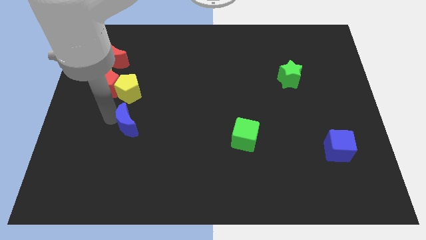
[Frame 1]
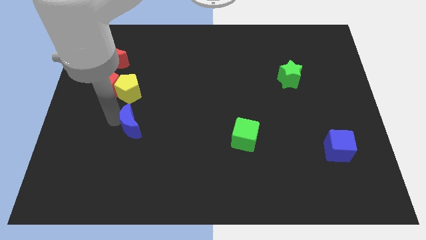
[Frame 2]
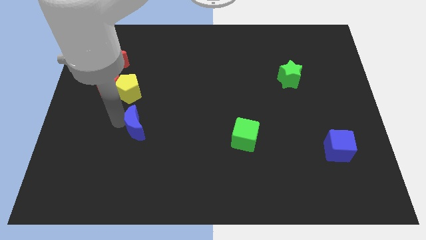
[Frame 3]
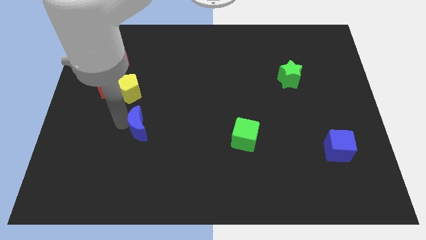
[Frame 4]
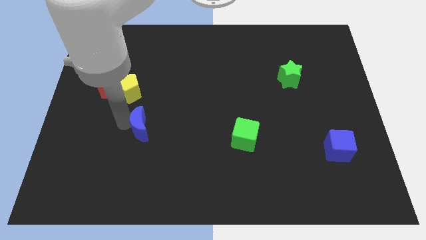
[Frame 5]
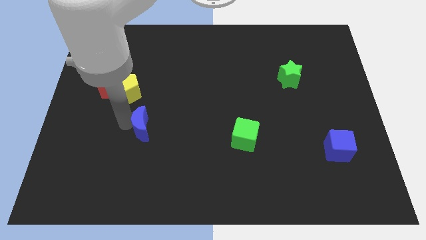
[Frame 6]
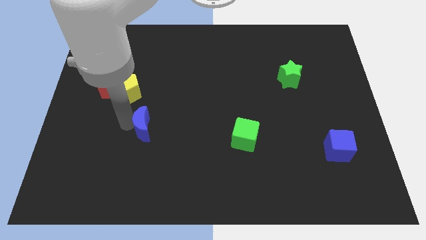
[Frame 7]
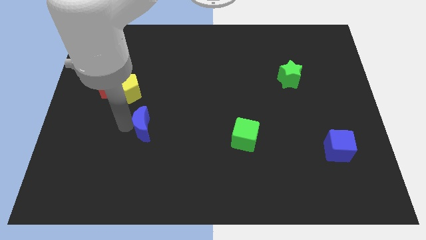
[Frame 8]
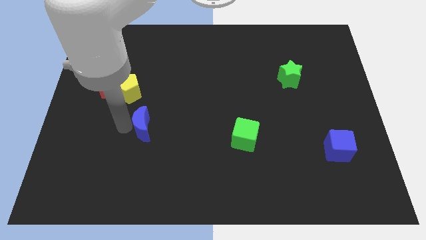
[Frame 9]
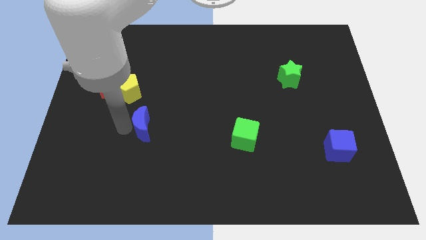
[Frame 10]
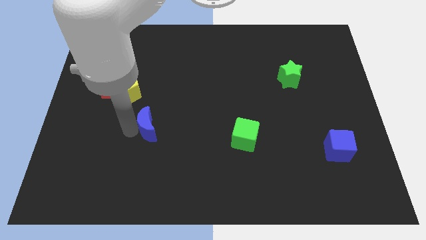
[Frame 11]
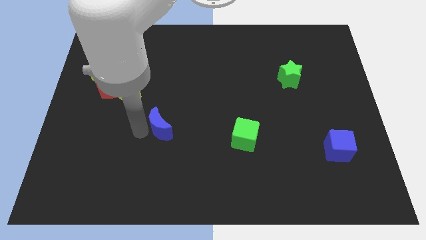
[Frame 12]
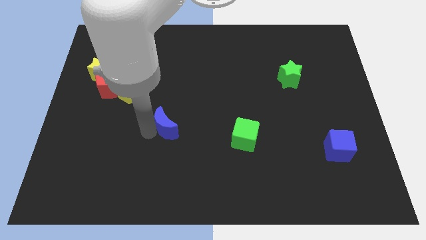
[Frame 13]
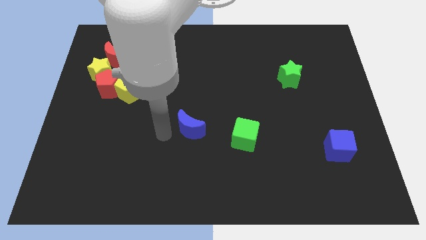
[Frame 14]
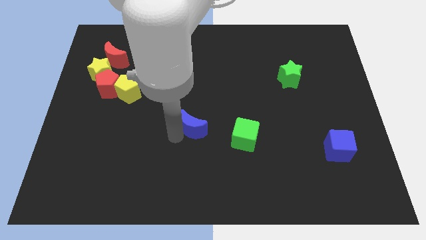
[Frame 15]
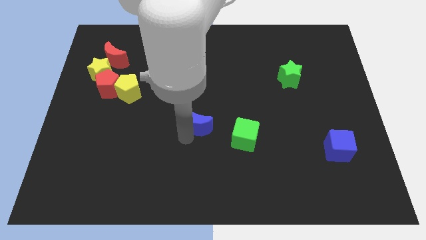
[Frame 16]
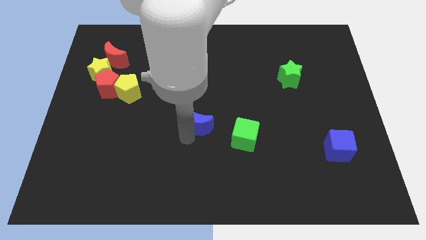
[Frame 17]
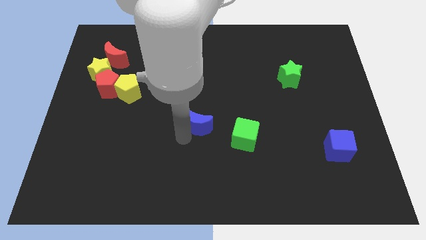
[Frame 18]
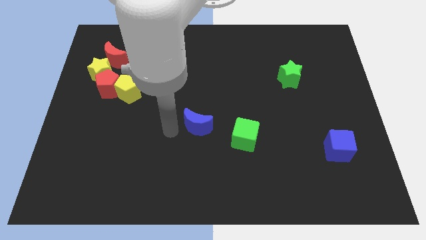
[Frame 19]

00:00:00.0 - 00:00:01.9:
place the blue moon in between the yellow pentagon and green cube

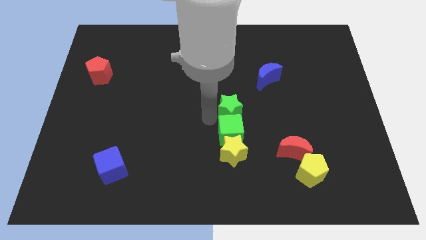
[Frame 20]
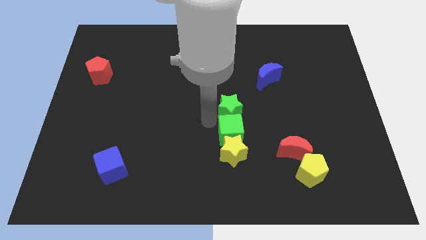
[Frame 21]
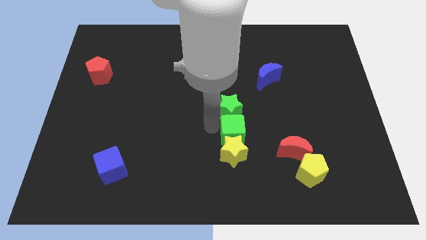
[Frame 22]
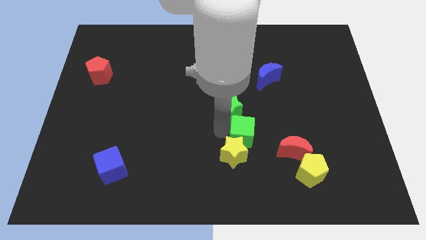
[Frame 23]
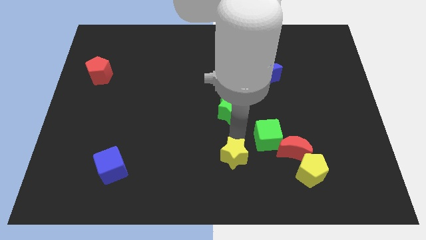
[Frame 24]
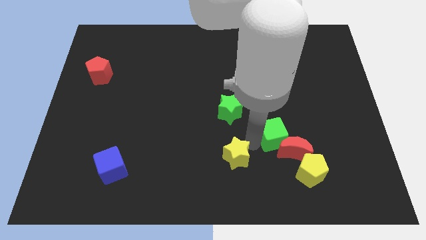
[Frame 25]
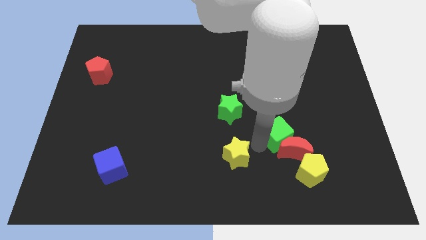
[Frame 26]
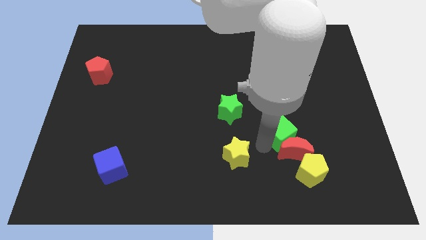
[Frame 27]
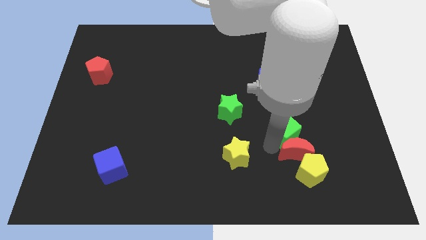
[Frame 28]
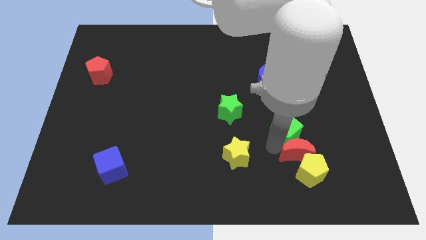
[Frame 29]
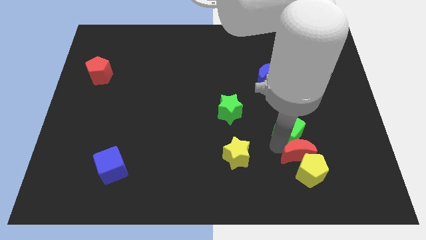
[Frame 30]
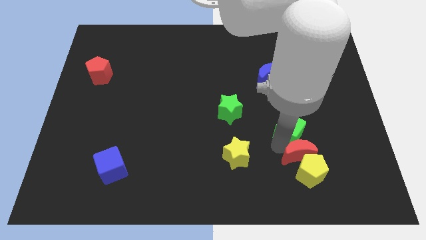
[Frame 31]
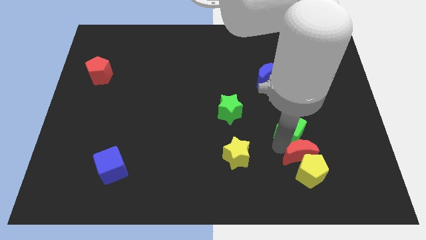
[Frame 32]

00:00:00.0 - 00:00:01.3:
put the green cube into the red crescent

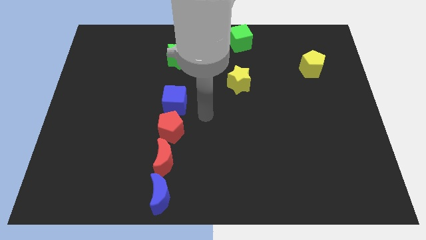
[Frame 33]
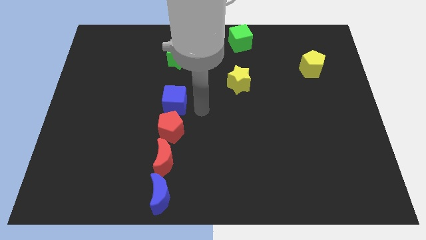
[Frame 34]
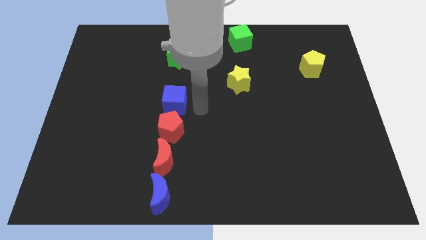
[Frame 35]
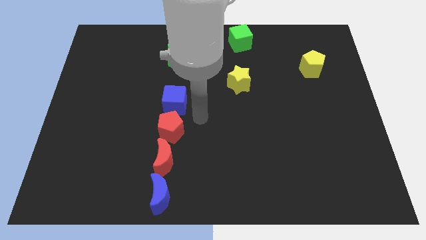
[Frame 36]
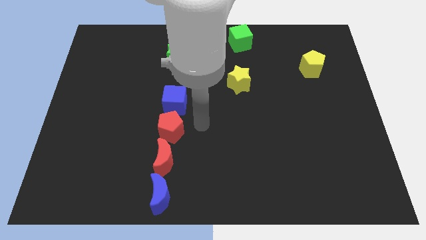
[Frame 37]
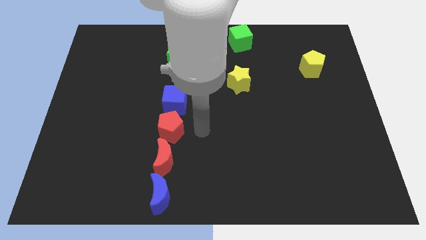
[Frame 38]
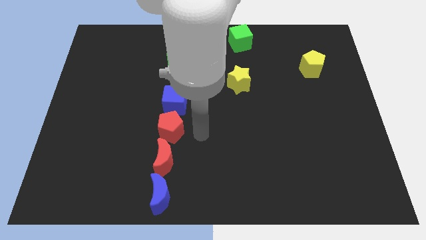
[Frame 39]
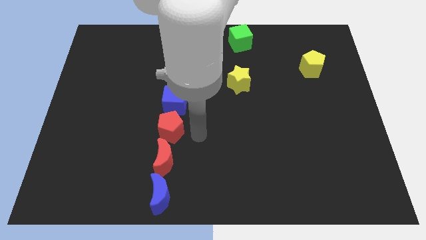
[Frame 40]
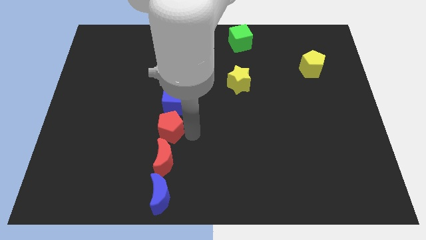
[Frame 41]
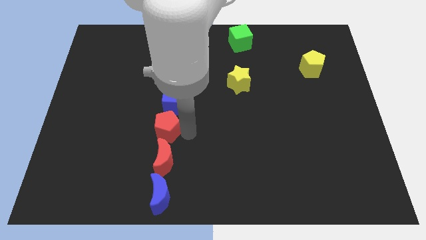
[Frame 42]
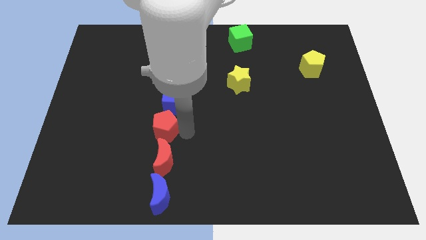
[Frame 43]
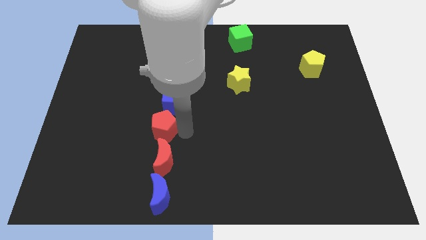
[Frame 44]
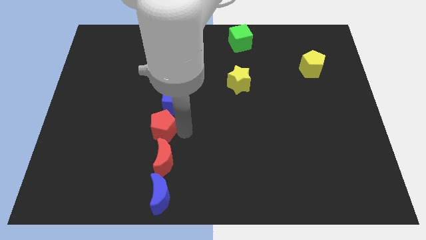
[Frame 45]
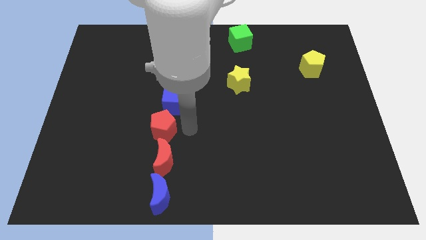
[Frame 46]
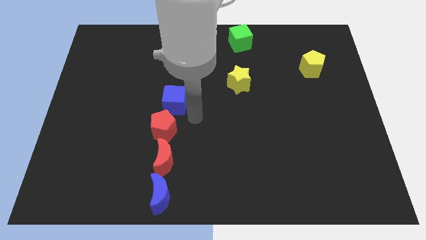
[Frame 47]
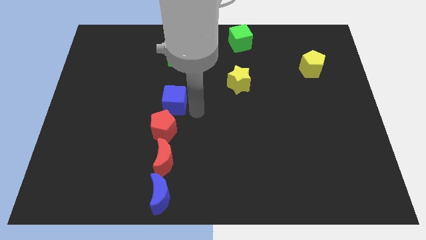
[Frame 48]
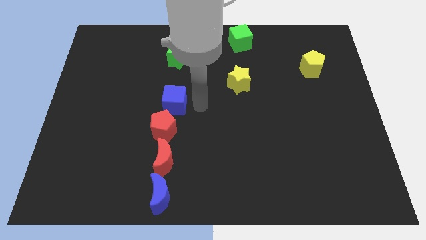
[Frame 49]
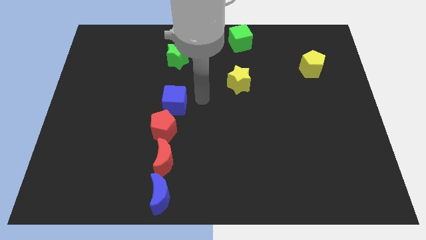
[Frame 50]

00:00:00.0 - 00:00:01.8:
move the red pentagon slightly

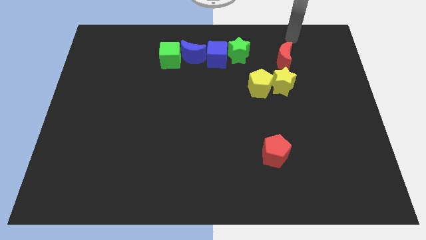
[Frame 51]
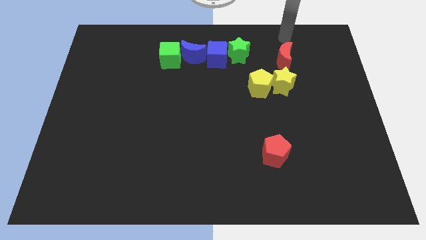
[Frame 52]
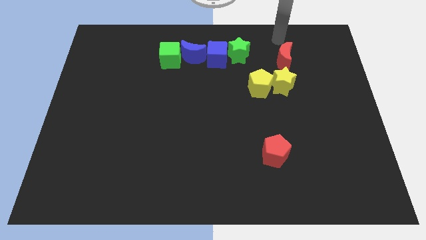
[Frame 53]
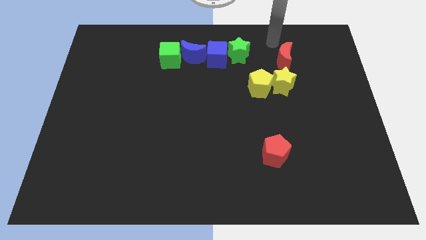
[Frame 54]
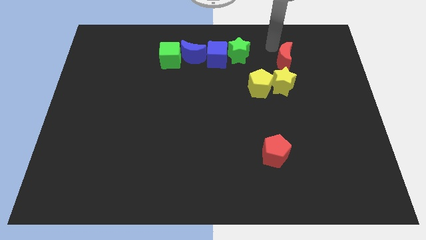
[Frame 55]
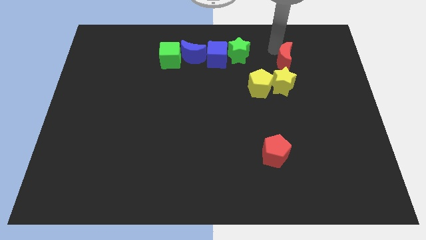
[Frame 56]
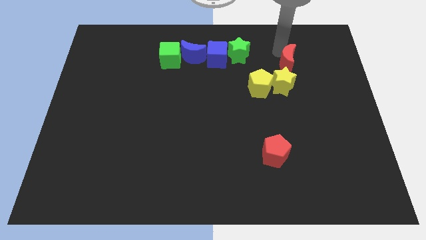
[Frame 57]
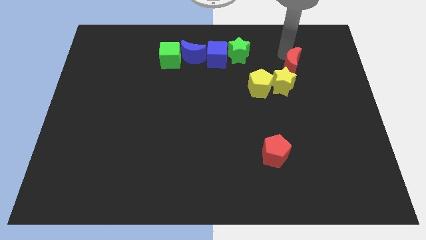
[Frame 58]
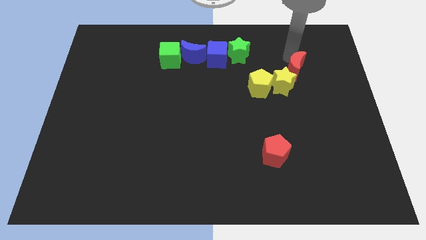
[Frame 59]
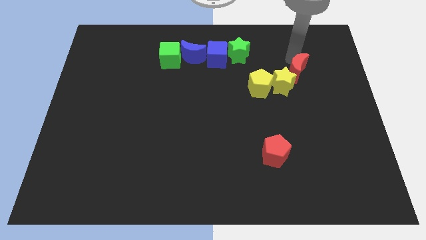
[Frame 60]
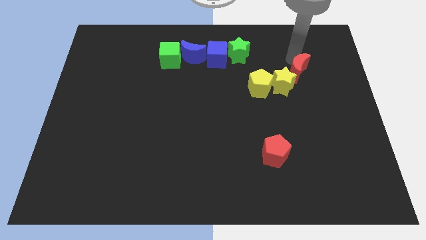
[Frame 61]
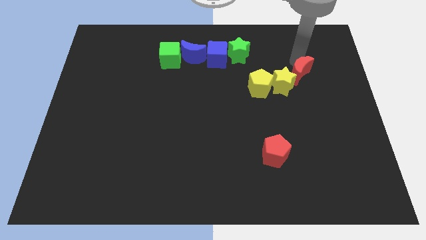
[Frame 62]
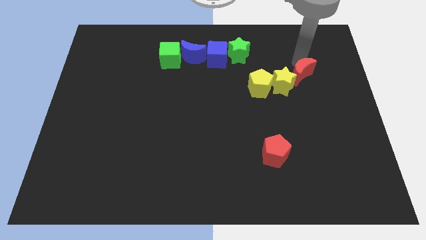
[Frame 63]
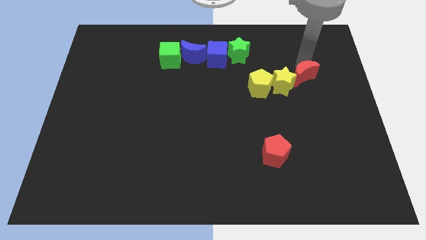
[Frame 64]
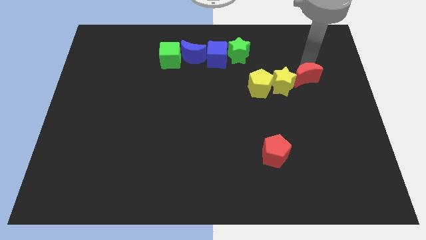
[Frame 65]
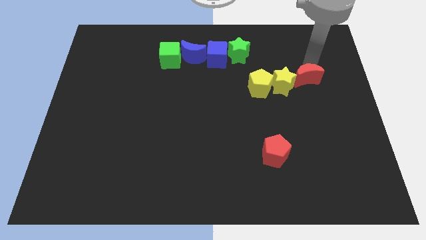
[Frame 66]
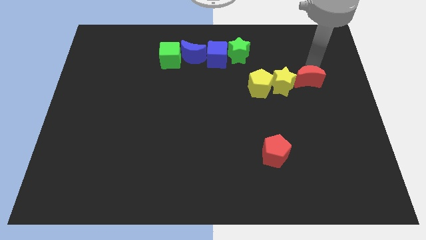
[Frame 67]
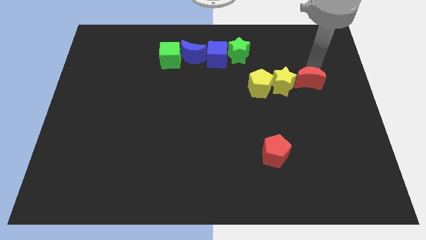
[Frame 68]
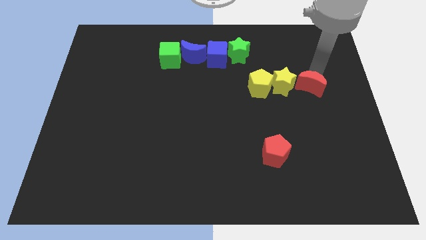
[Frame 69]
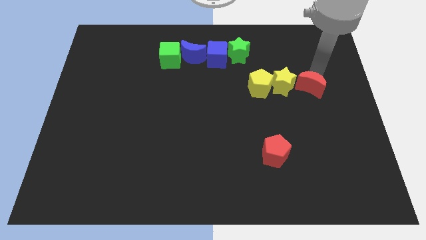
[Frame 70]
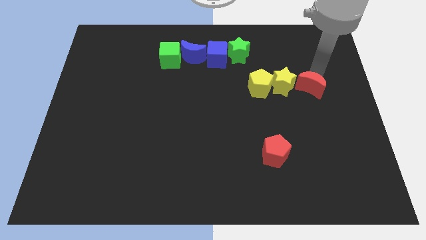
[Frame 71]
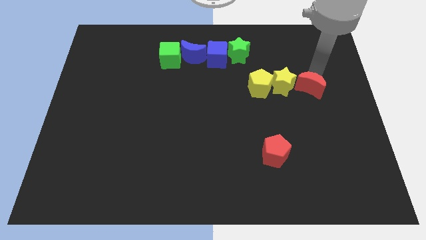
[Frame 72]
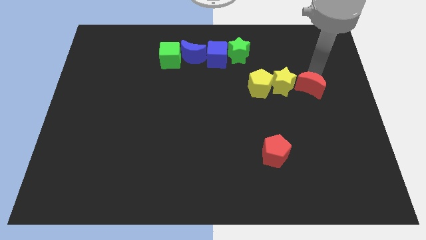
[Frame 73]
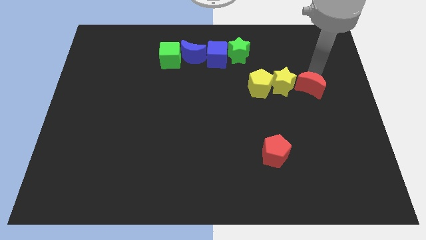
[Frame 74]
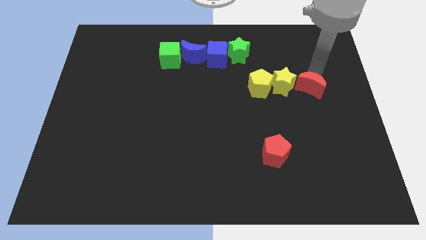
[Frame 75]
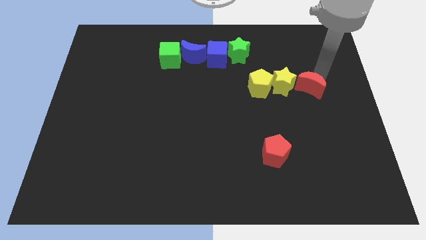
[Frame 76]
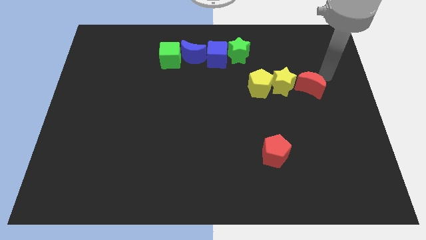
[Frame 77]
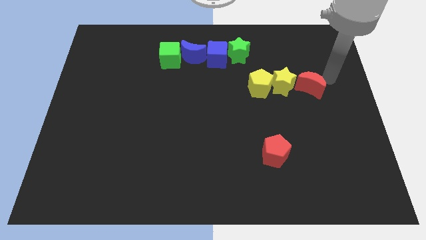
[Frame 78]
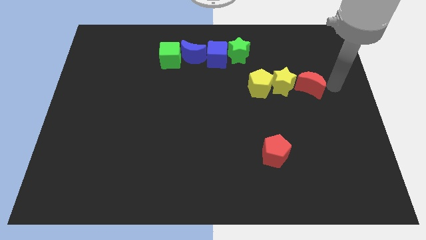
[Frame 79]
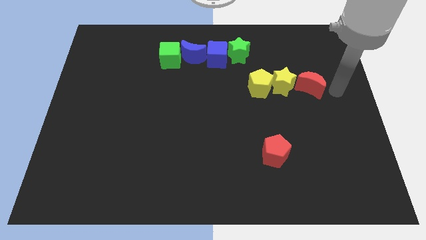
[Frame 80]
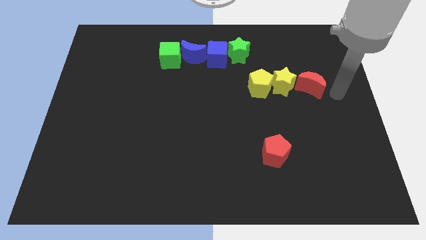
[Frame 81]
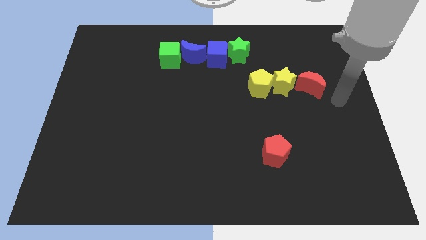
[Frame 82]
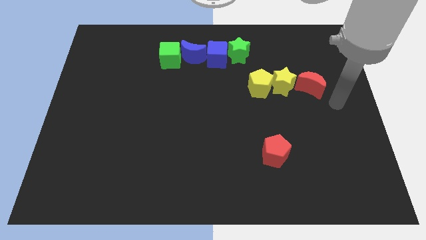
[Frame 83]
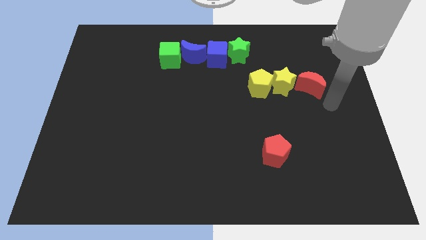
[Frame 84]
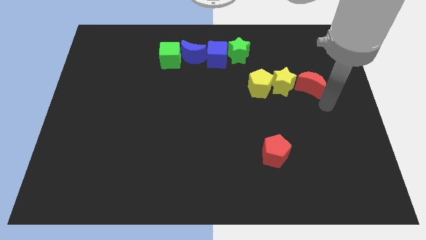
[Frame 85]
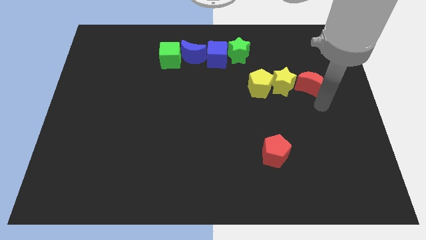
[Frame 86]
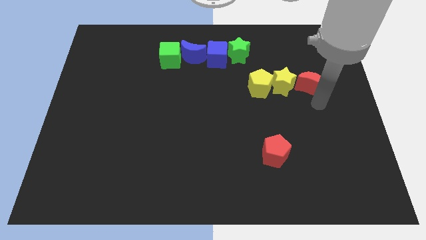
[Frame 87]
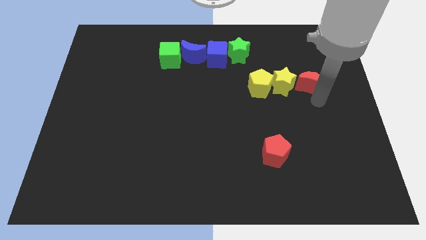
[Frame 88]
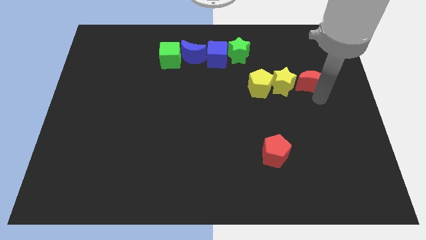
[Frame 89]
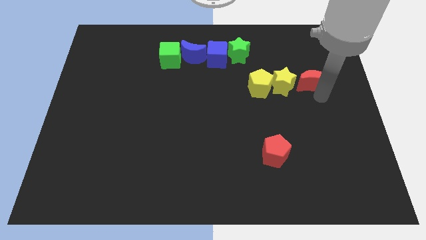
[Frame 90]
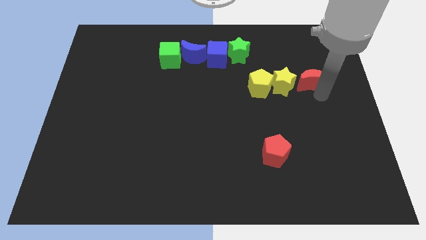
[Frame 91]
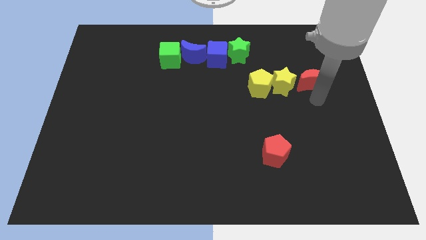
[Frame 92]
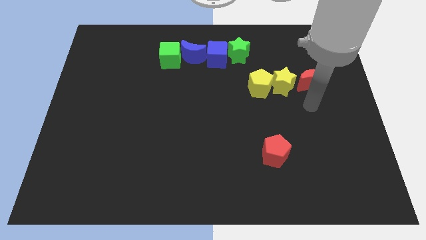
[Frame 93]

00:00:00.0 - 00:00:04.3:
place the red crescent to the right side of the yellow star
